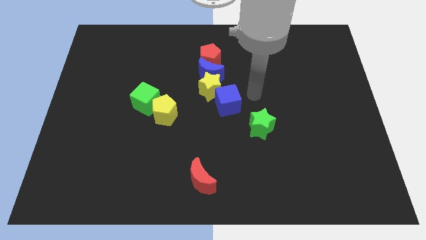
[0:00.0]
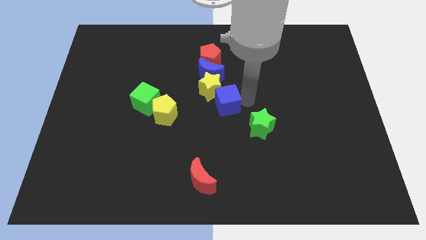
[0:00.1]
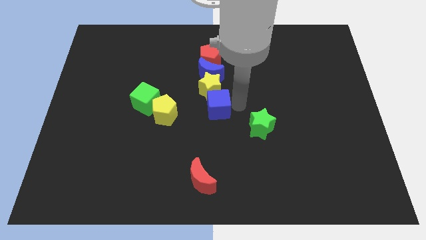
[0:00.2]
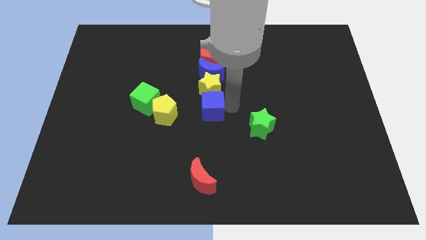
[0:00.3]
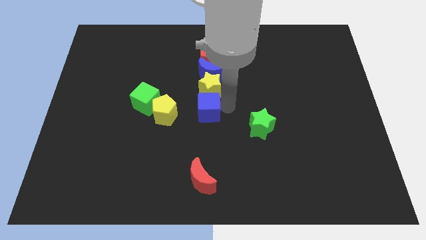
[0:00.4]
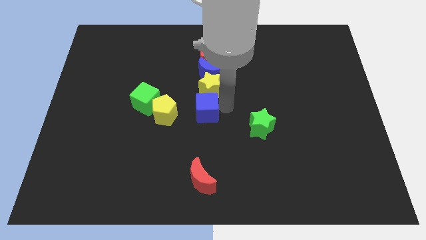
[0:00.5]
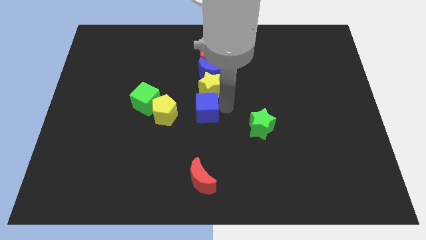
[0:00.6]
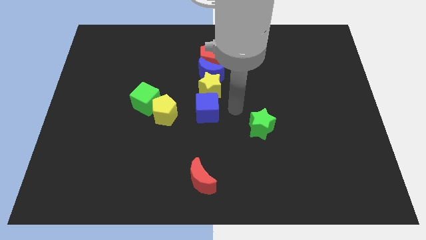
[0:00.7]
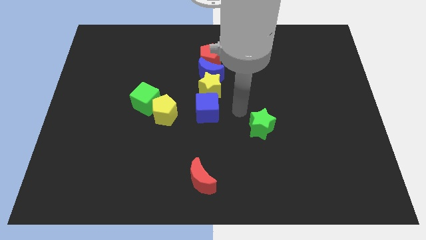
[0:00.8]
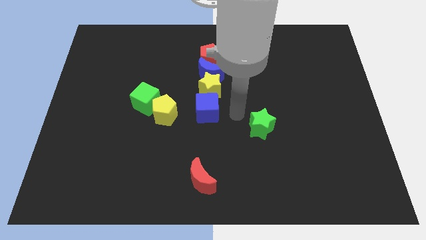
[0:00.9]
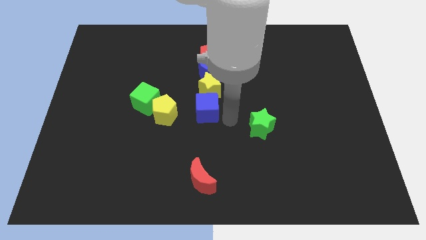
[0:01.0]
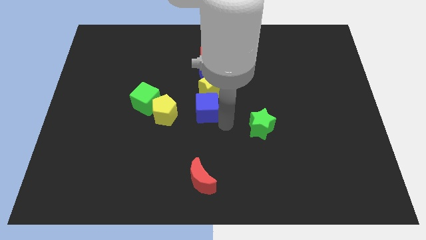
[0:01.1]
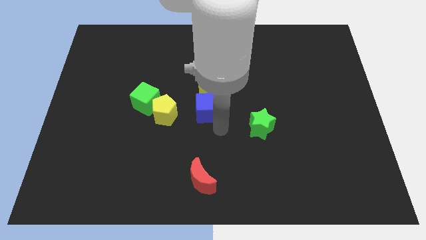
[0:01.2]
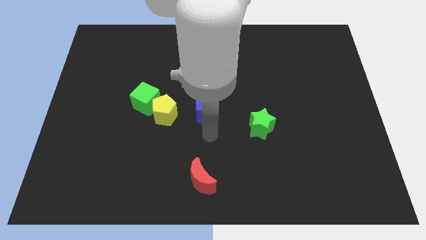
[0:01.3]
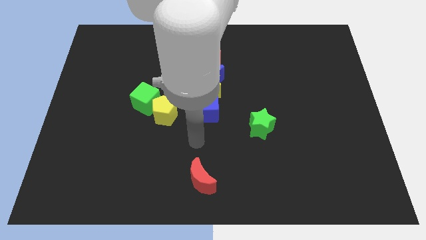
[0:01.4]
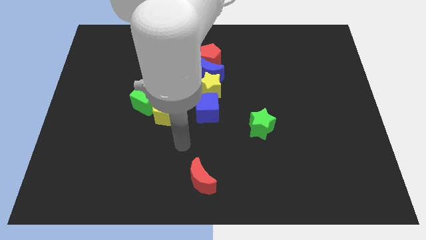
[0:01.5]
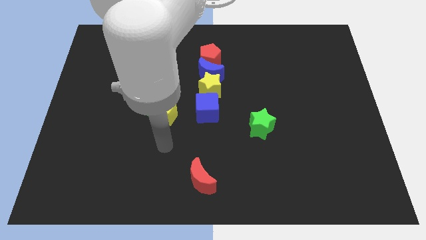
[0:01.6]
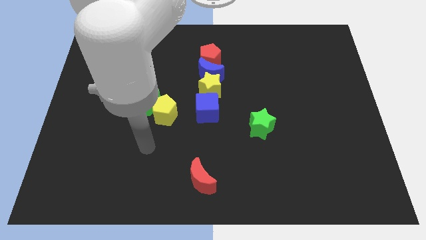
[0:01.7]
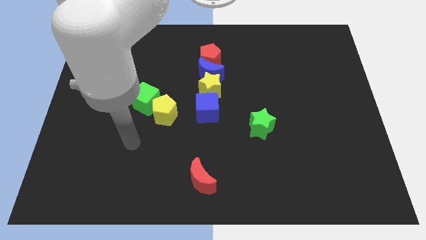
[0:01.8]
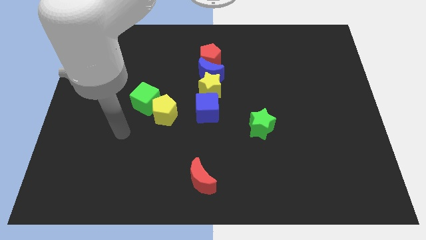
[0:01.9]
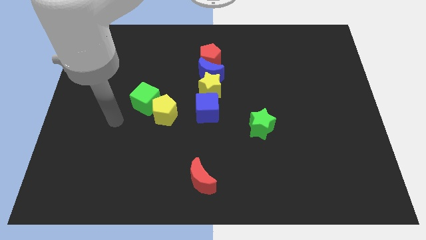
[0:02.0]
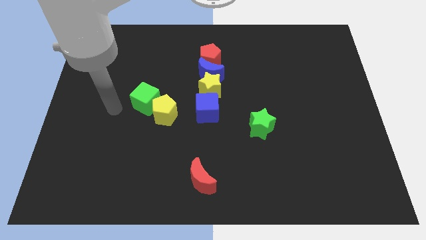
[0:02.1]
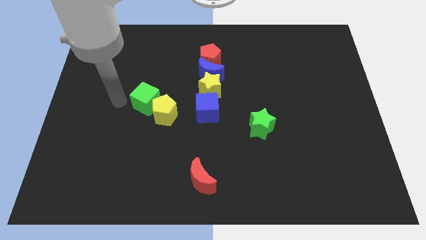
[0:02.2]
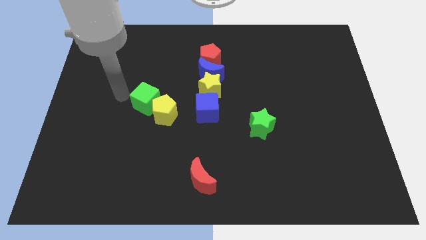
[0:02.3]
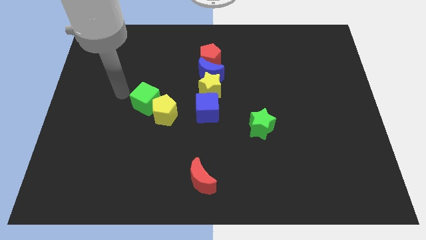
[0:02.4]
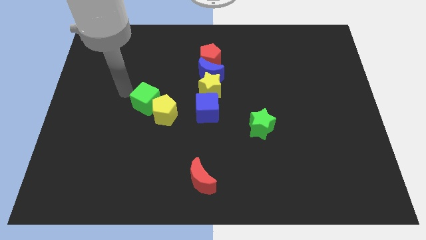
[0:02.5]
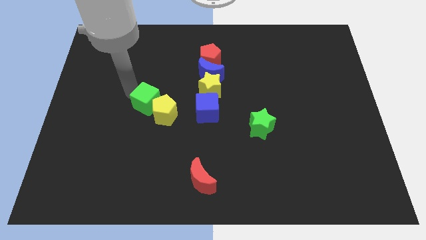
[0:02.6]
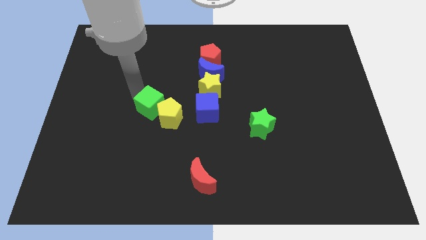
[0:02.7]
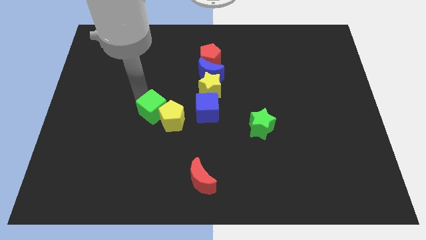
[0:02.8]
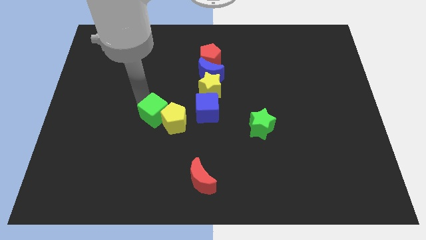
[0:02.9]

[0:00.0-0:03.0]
push the blue cube slightly to the left

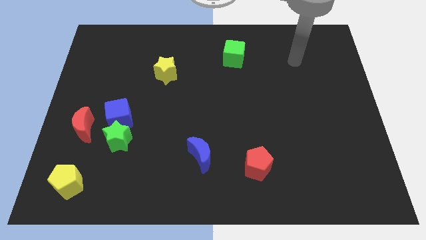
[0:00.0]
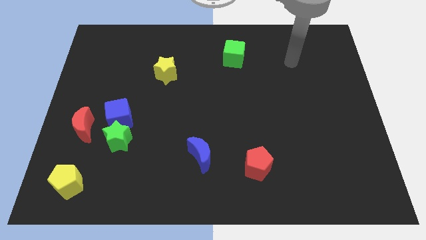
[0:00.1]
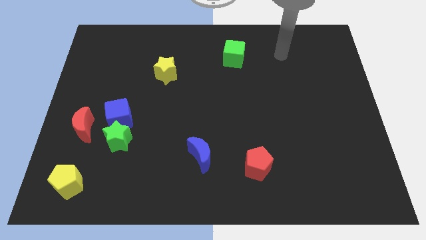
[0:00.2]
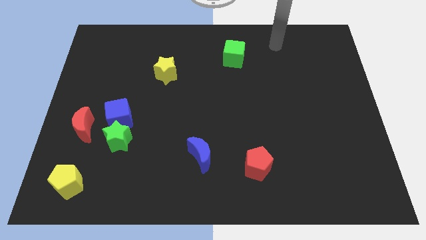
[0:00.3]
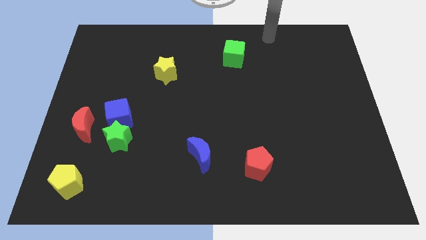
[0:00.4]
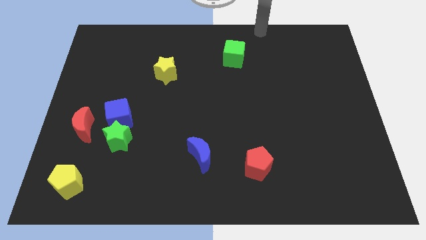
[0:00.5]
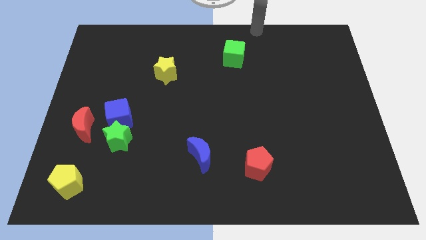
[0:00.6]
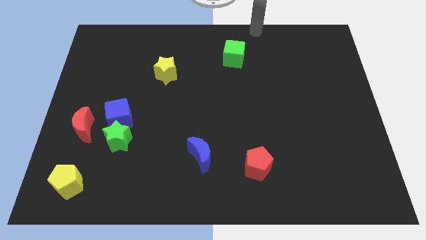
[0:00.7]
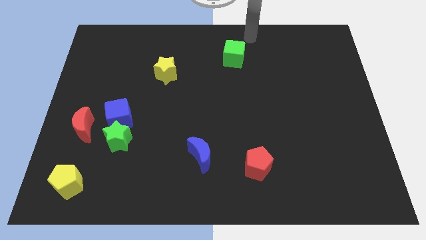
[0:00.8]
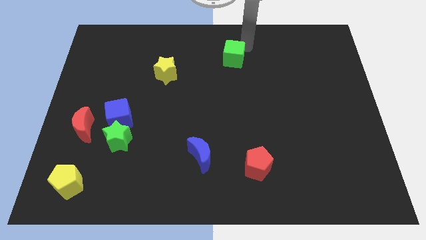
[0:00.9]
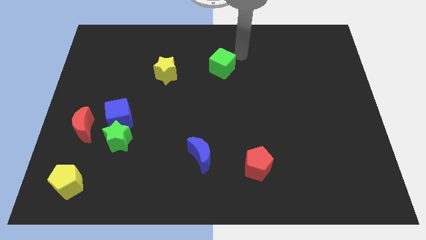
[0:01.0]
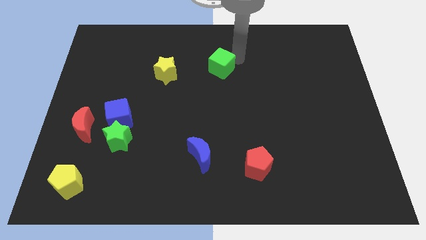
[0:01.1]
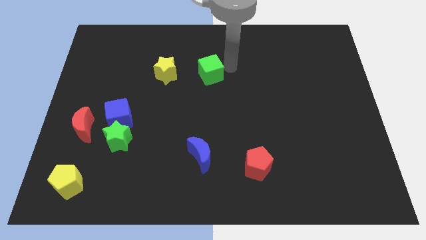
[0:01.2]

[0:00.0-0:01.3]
slightly push the green cube

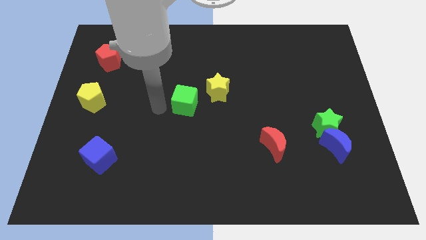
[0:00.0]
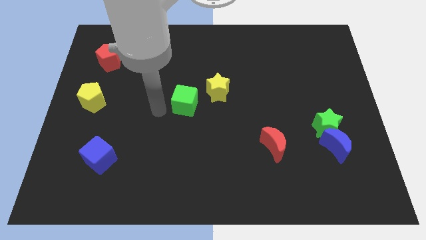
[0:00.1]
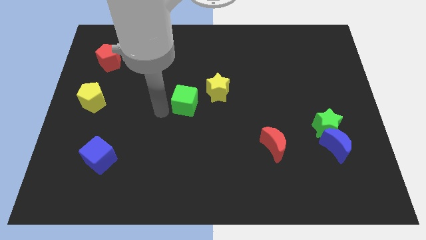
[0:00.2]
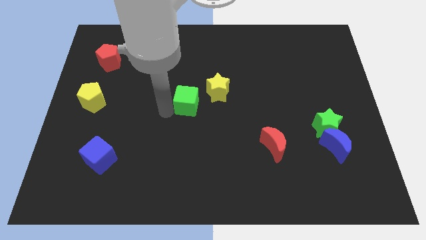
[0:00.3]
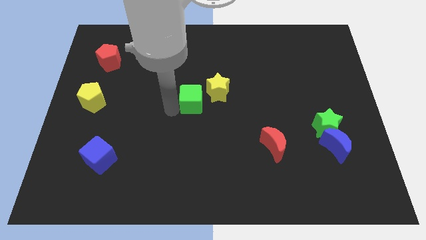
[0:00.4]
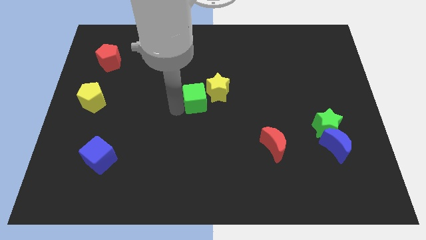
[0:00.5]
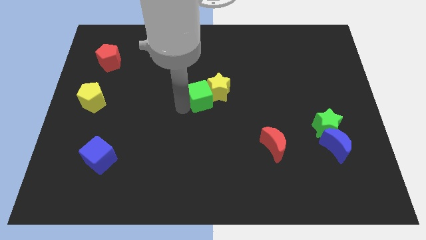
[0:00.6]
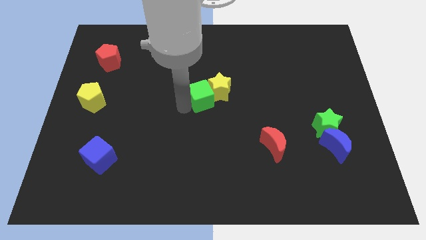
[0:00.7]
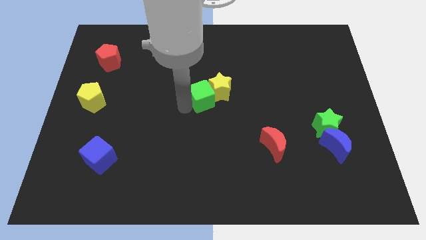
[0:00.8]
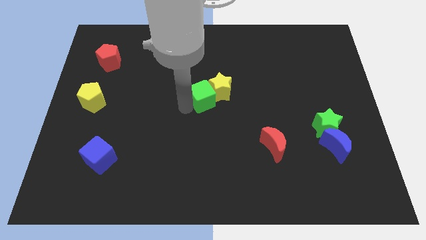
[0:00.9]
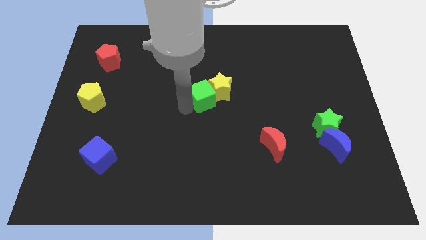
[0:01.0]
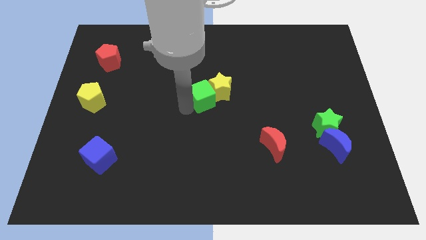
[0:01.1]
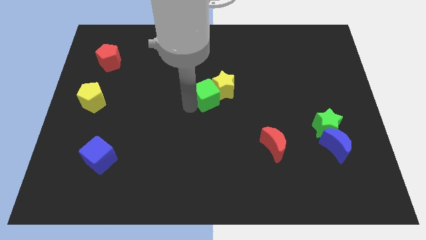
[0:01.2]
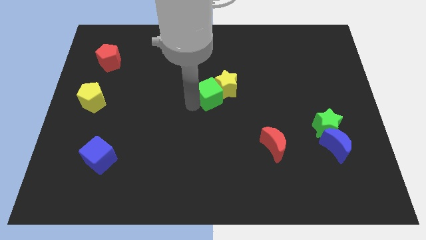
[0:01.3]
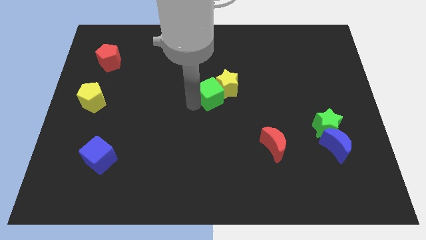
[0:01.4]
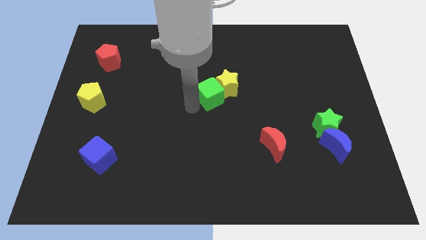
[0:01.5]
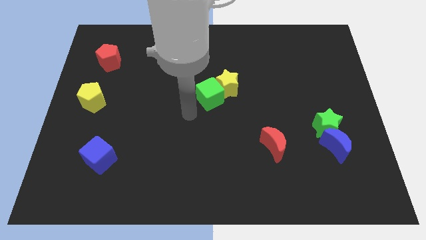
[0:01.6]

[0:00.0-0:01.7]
move the green cube into the yellow star

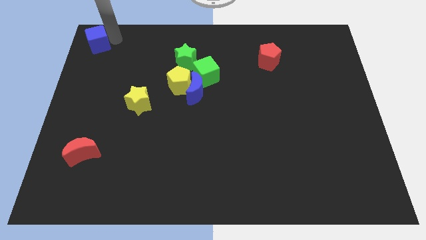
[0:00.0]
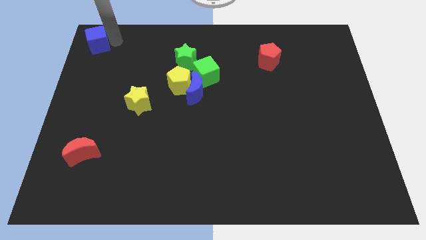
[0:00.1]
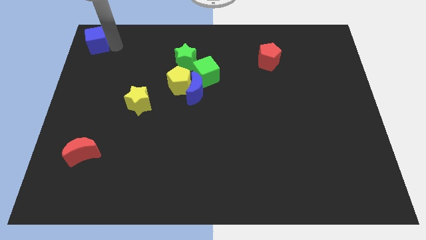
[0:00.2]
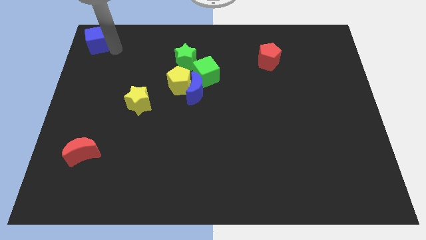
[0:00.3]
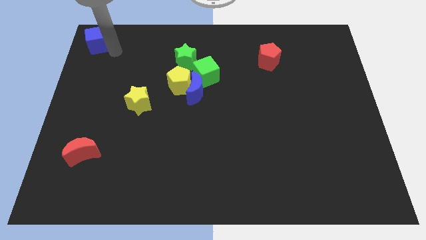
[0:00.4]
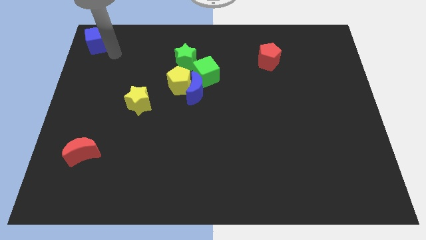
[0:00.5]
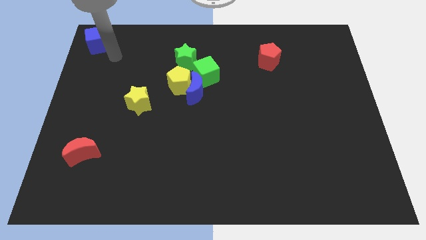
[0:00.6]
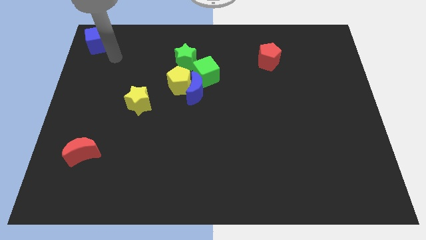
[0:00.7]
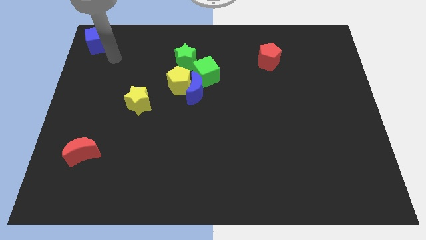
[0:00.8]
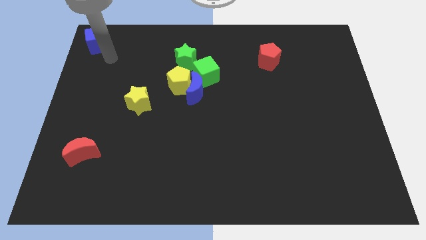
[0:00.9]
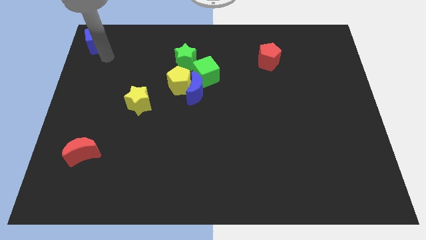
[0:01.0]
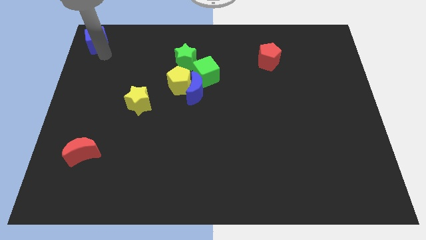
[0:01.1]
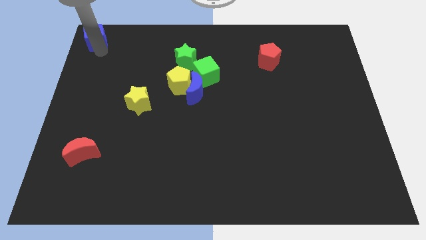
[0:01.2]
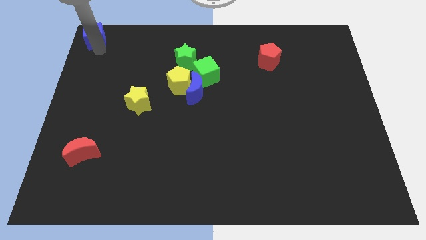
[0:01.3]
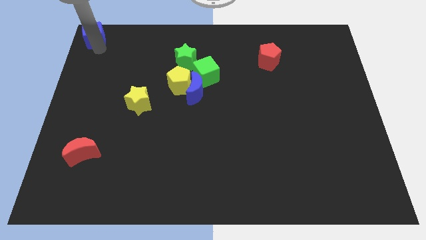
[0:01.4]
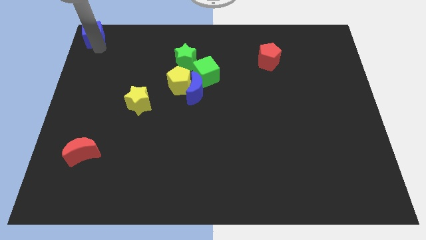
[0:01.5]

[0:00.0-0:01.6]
move the blue cube to the top left of the table

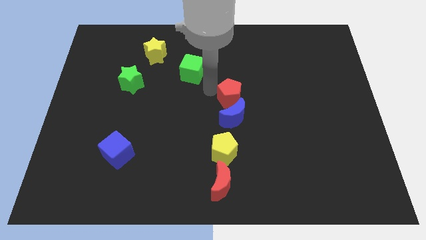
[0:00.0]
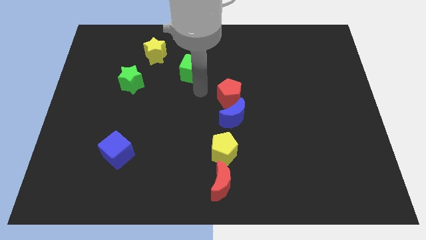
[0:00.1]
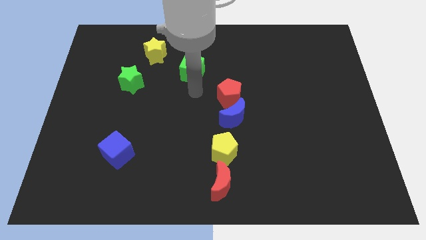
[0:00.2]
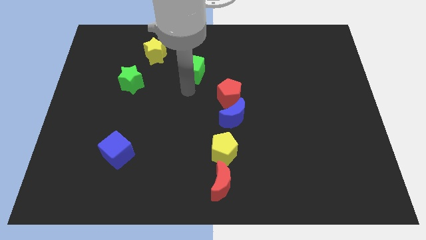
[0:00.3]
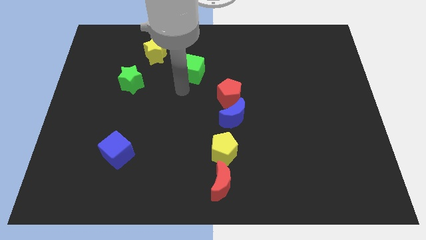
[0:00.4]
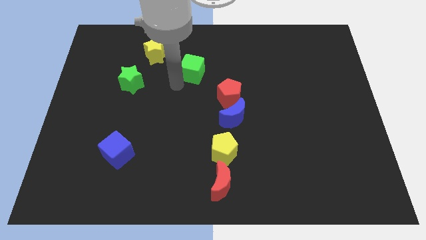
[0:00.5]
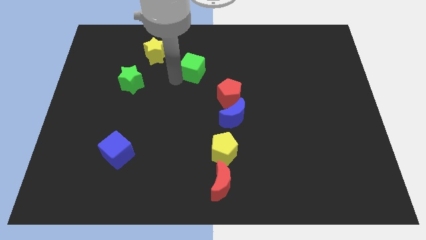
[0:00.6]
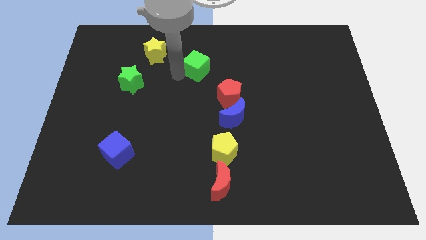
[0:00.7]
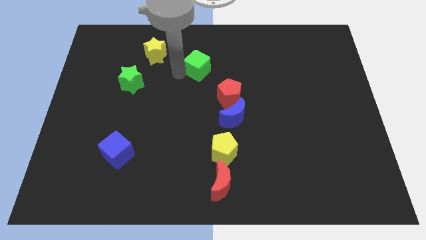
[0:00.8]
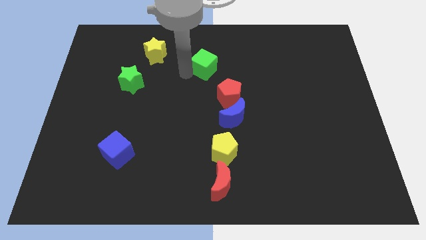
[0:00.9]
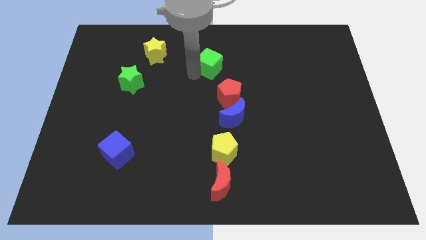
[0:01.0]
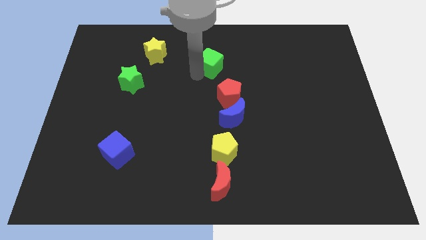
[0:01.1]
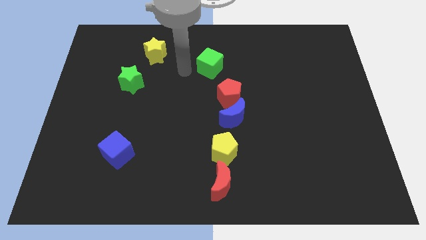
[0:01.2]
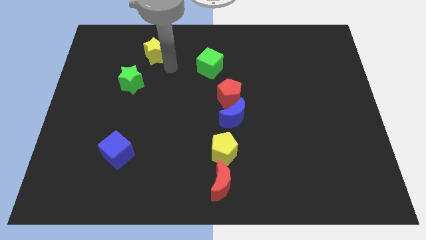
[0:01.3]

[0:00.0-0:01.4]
push the green cube diagonally top left to the red pentagon

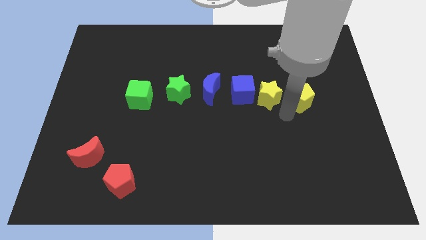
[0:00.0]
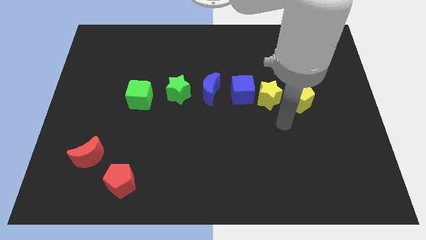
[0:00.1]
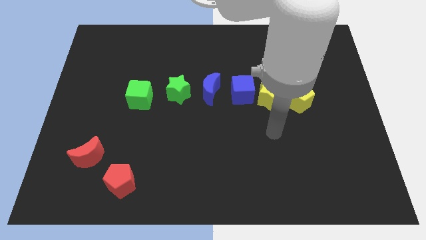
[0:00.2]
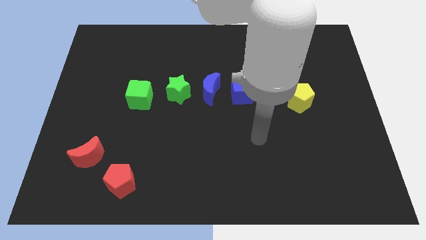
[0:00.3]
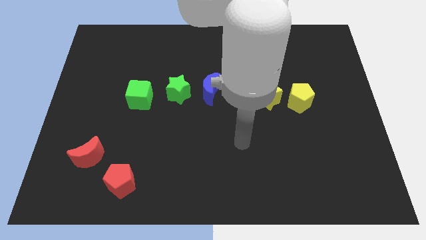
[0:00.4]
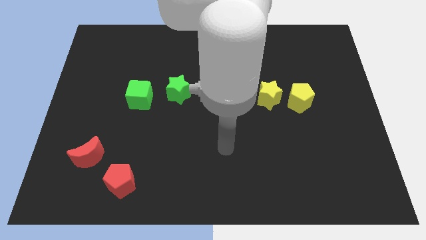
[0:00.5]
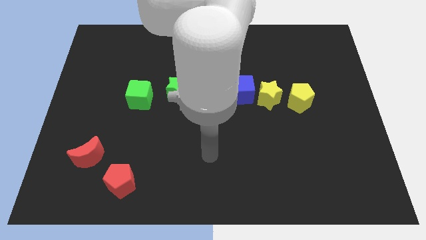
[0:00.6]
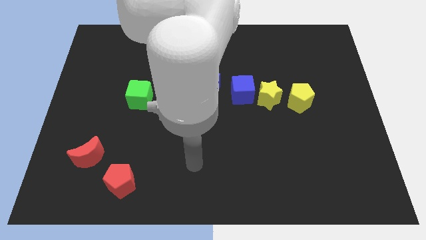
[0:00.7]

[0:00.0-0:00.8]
move away from yellow pentagon
